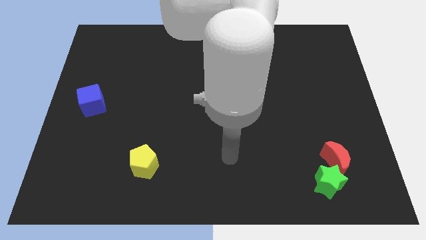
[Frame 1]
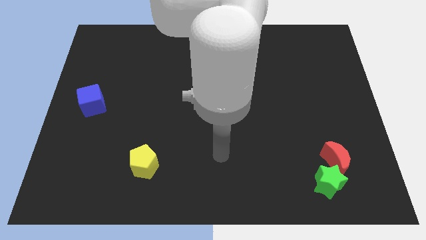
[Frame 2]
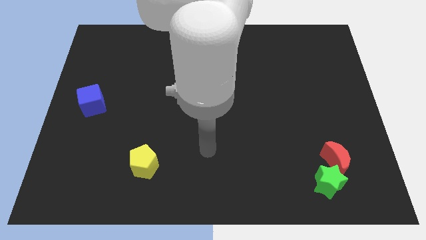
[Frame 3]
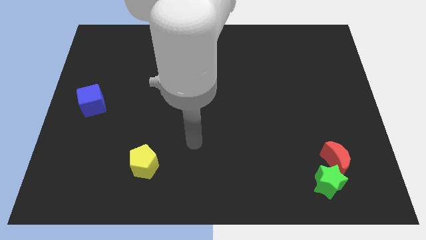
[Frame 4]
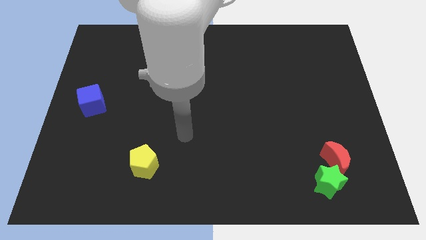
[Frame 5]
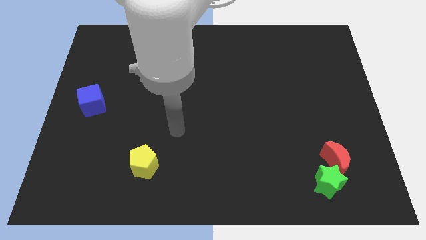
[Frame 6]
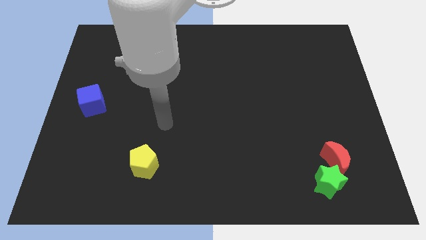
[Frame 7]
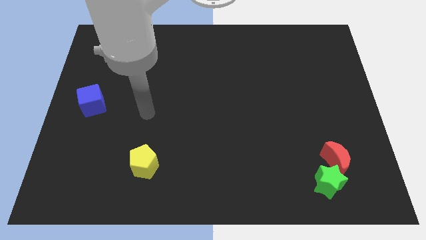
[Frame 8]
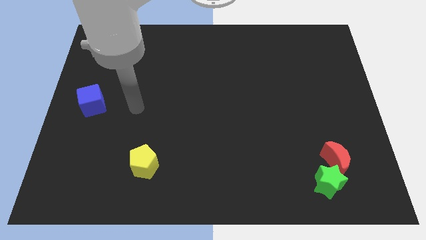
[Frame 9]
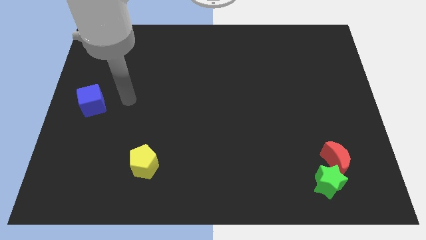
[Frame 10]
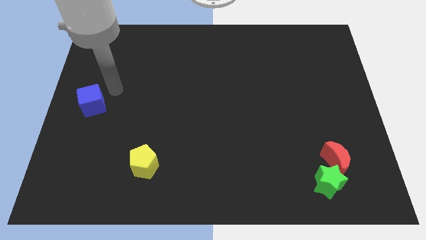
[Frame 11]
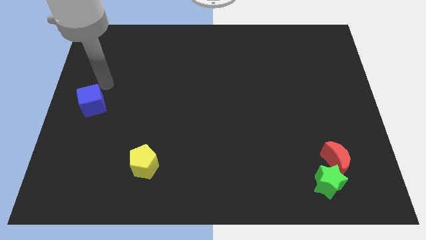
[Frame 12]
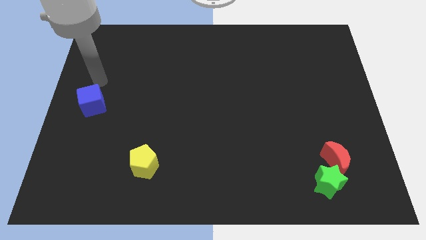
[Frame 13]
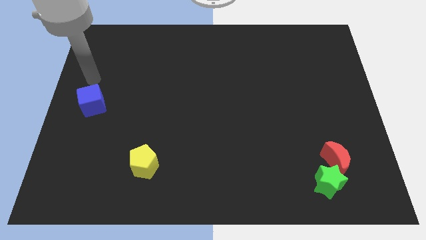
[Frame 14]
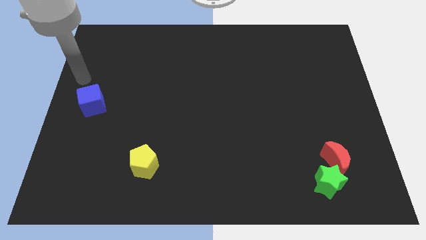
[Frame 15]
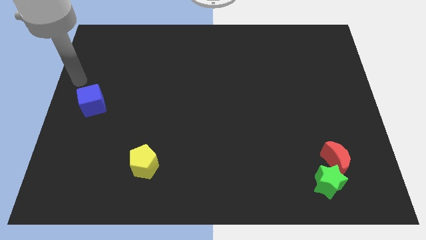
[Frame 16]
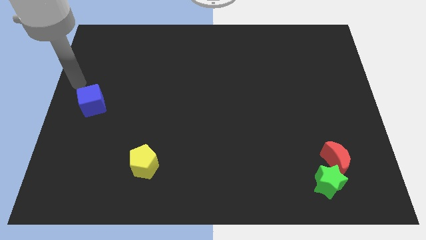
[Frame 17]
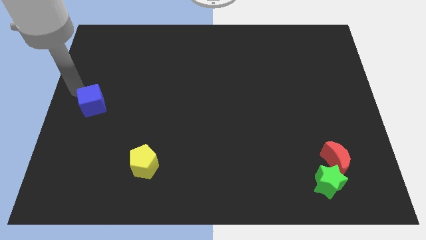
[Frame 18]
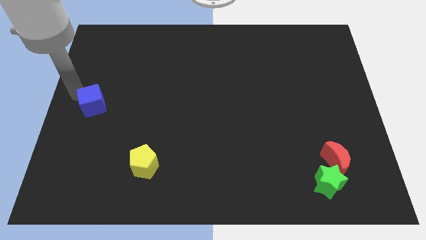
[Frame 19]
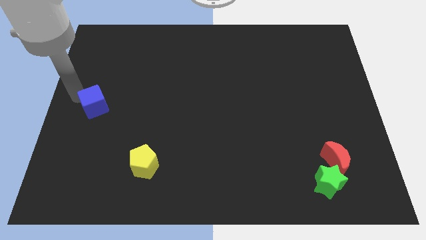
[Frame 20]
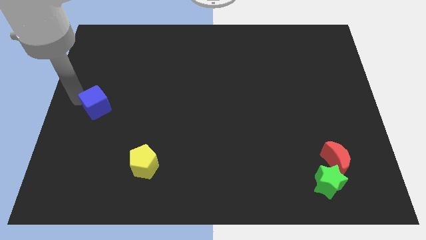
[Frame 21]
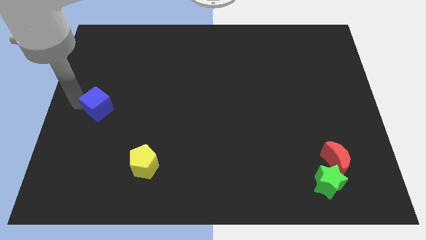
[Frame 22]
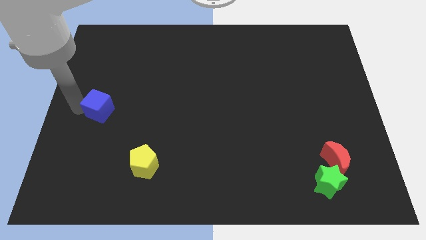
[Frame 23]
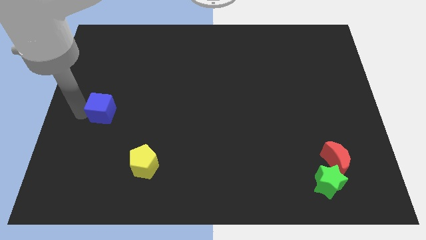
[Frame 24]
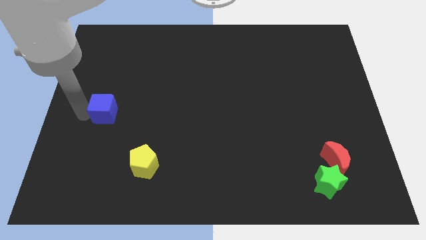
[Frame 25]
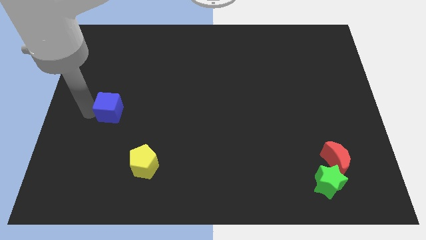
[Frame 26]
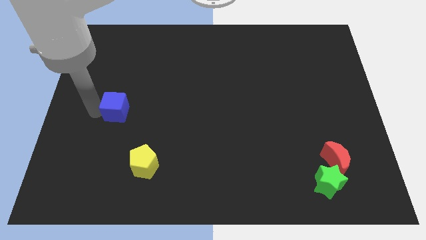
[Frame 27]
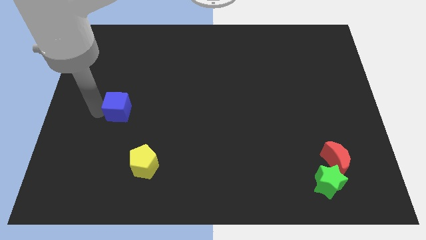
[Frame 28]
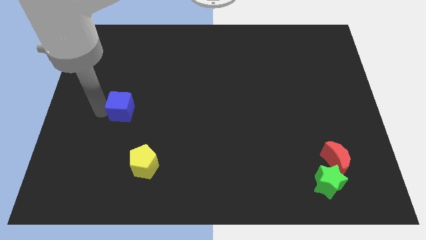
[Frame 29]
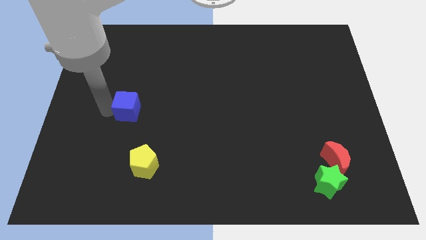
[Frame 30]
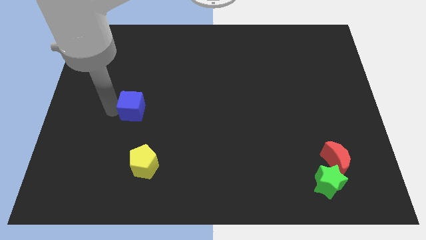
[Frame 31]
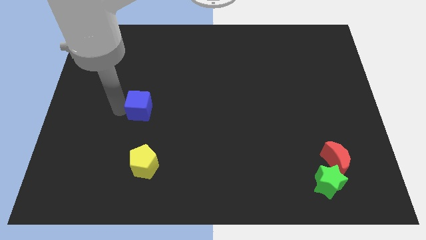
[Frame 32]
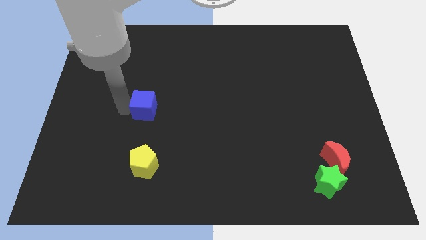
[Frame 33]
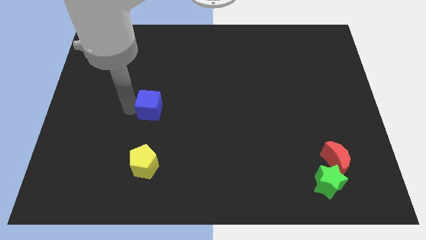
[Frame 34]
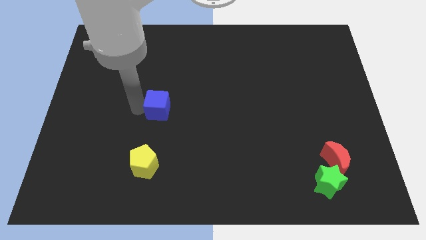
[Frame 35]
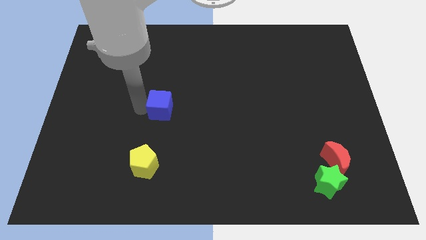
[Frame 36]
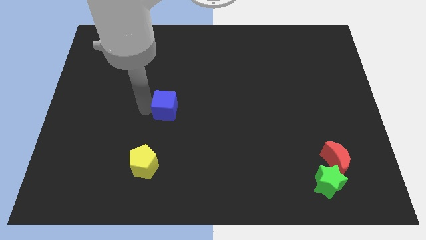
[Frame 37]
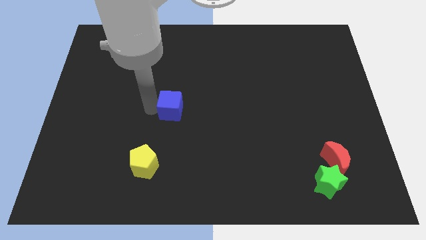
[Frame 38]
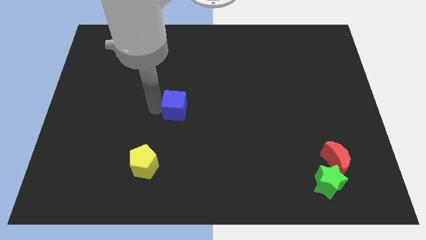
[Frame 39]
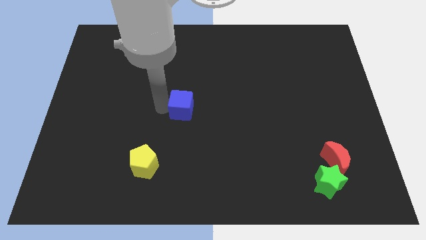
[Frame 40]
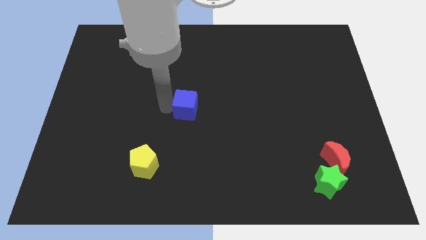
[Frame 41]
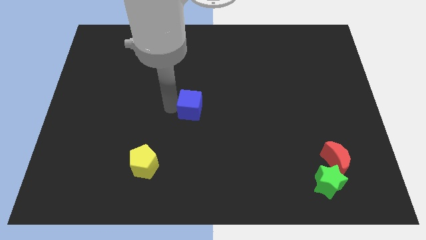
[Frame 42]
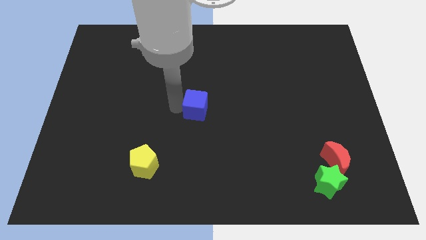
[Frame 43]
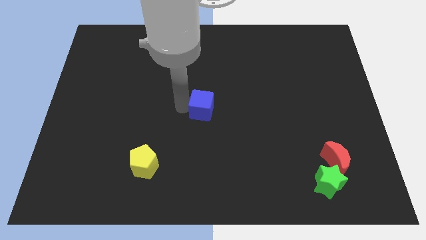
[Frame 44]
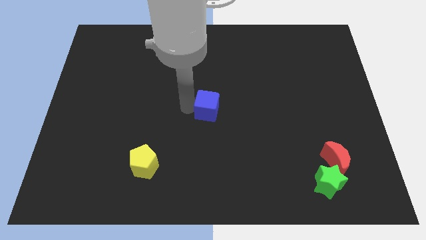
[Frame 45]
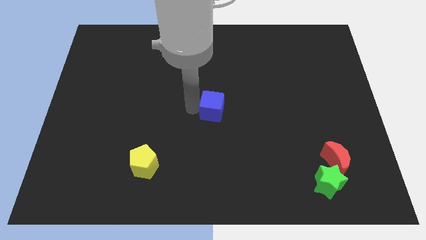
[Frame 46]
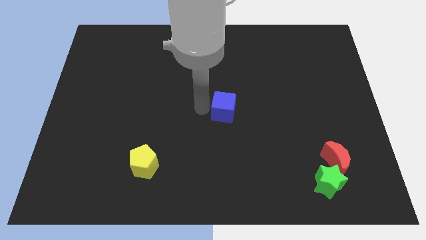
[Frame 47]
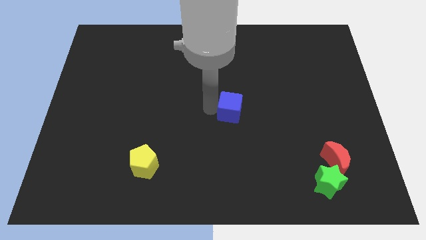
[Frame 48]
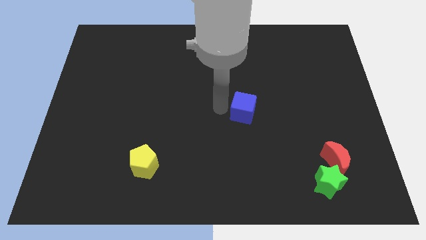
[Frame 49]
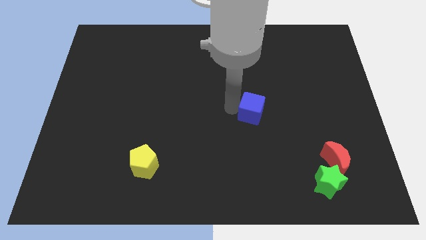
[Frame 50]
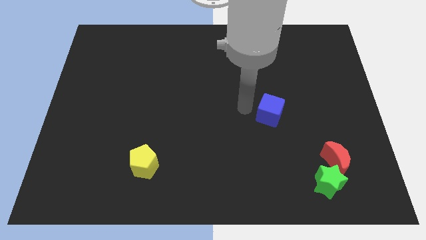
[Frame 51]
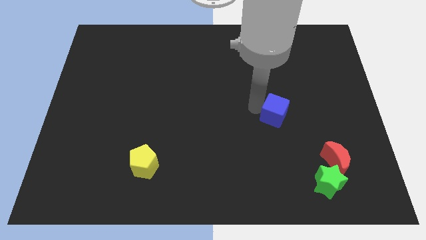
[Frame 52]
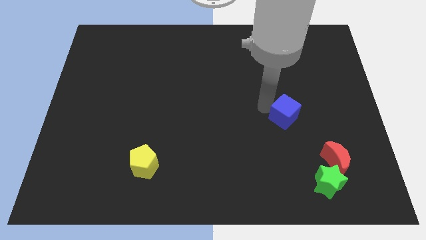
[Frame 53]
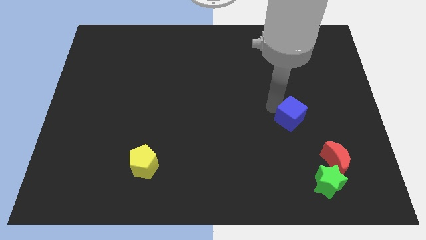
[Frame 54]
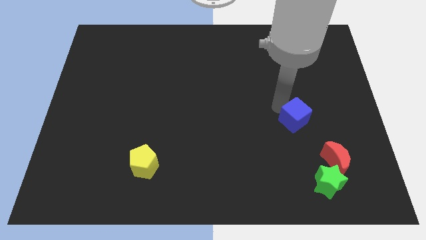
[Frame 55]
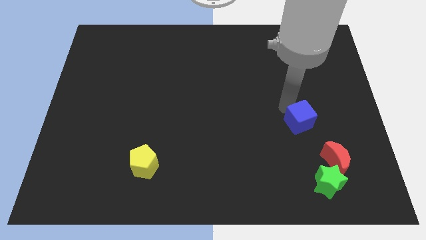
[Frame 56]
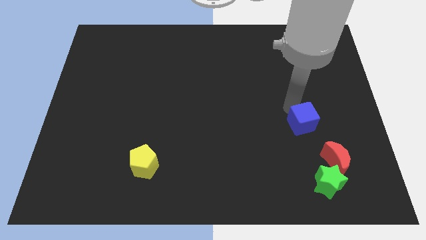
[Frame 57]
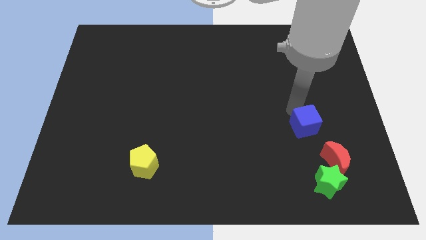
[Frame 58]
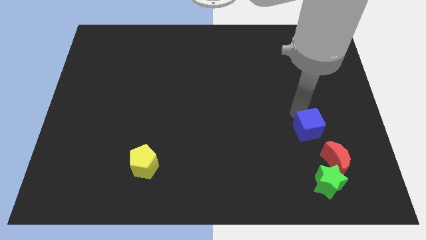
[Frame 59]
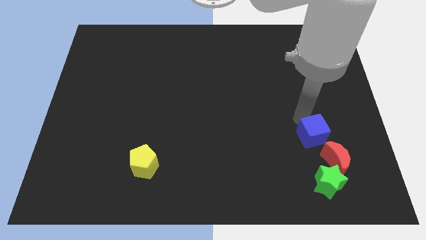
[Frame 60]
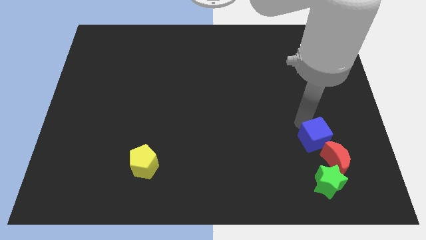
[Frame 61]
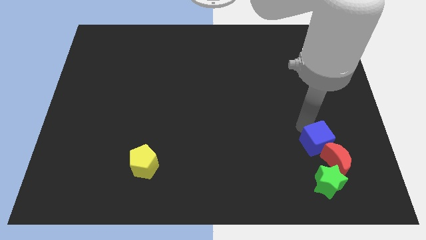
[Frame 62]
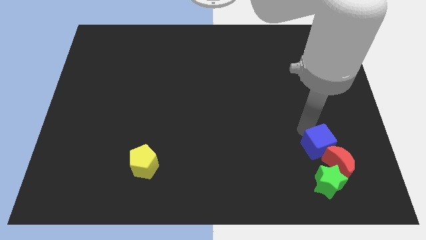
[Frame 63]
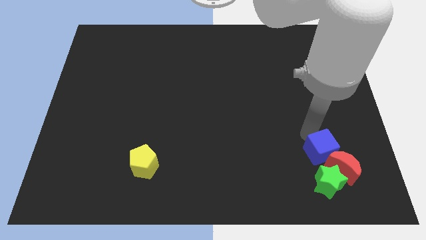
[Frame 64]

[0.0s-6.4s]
push the blue block next to the moon

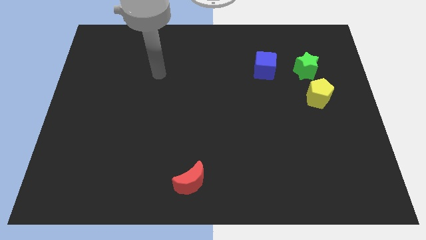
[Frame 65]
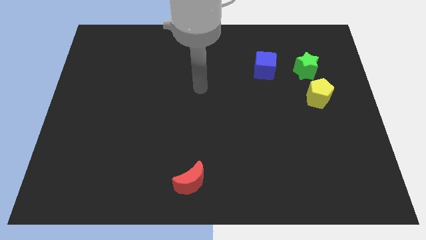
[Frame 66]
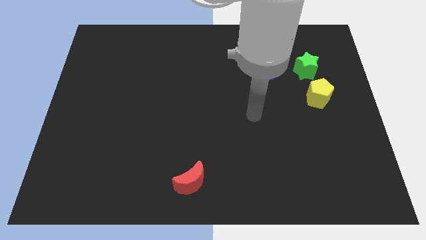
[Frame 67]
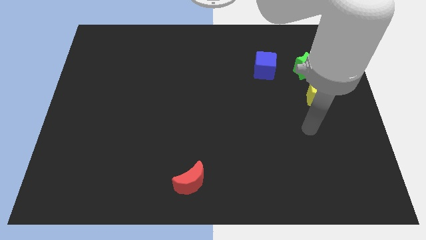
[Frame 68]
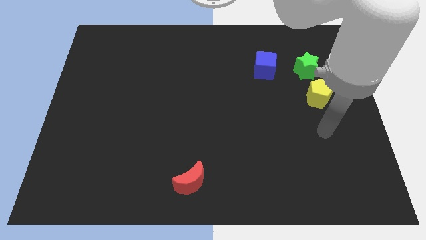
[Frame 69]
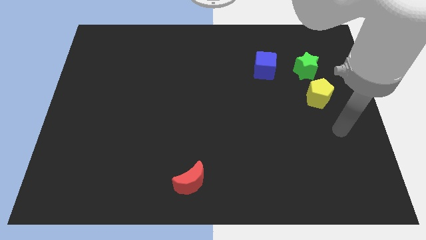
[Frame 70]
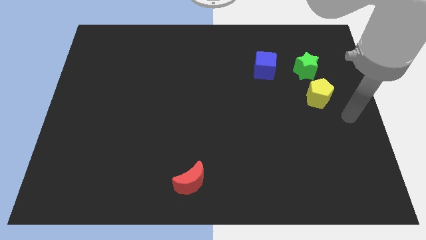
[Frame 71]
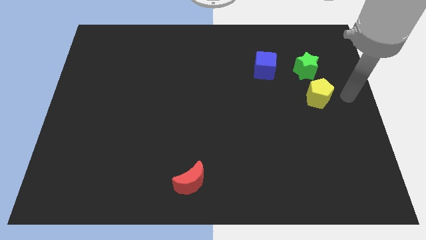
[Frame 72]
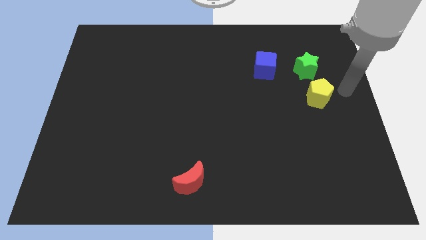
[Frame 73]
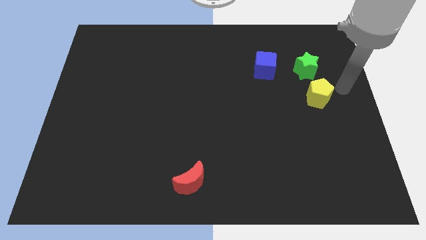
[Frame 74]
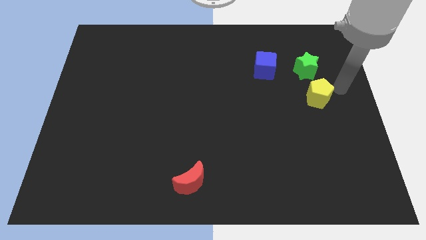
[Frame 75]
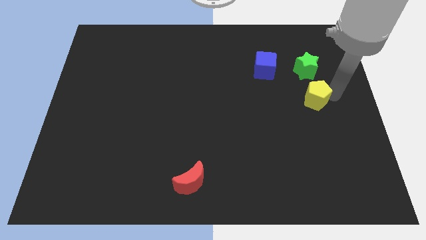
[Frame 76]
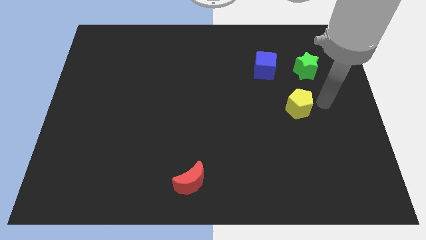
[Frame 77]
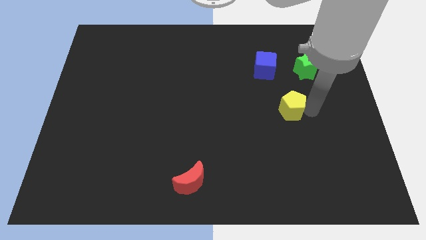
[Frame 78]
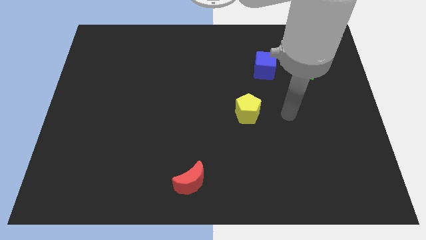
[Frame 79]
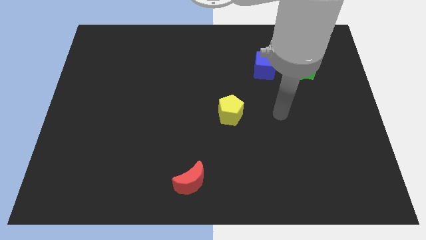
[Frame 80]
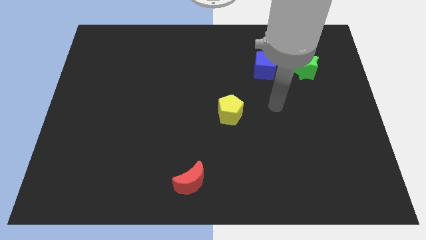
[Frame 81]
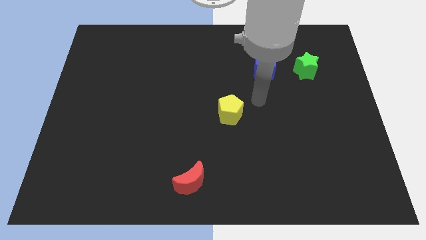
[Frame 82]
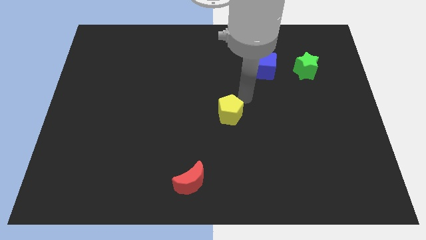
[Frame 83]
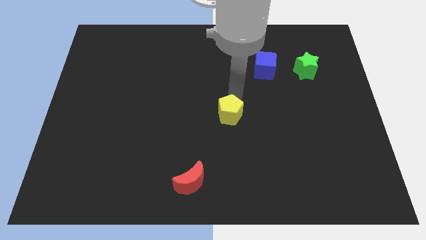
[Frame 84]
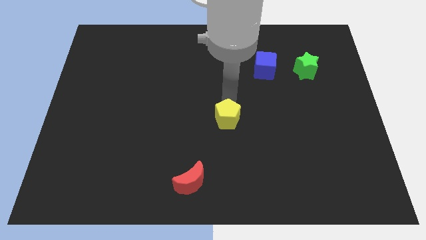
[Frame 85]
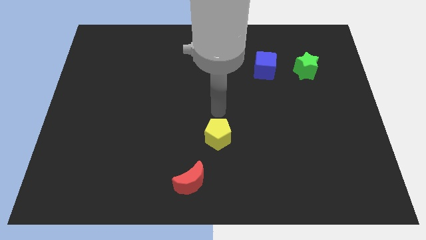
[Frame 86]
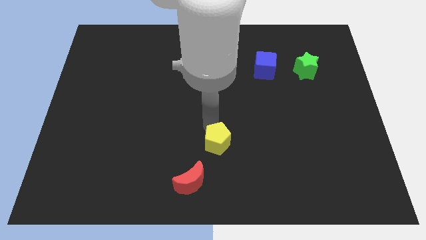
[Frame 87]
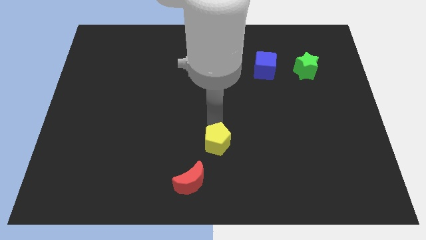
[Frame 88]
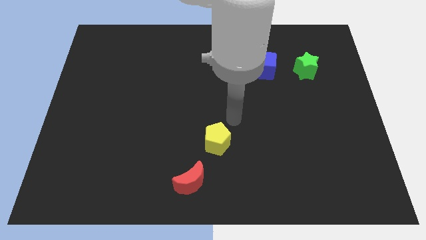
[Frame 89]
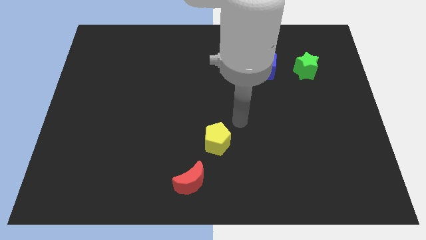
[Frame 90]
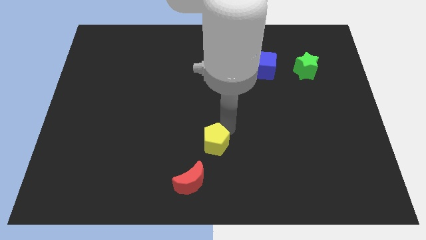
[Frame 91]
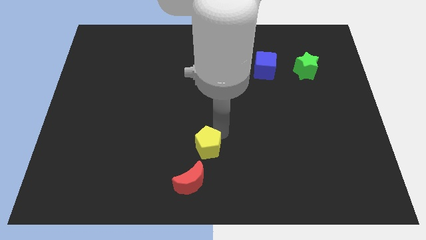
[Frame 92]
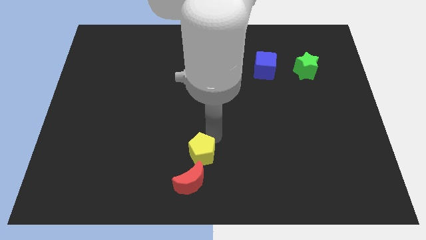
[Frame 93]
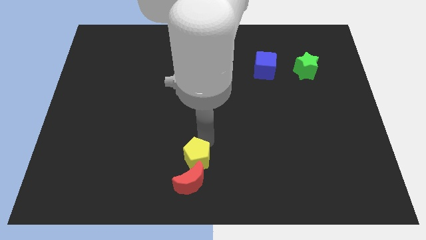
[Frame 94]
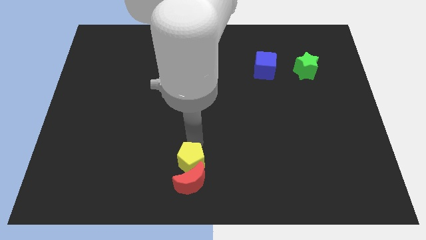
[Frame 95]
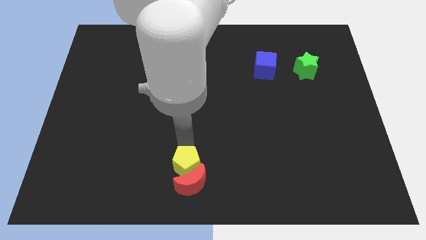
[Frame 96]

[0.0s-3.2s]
move the pentagon close to the red moon
